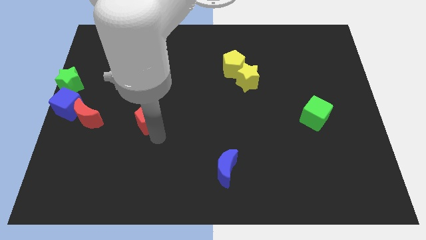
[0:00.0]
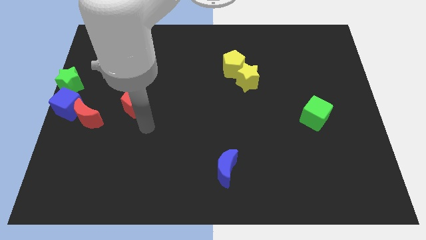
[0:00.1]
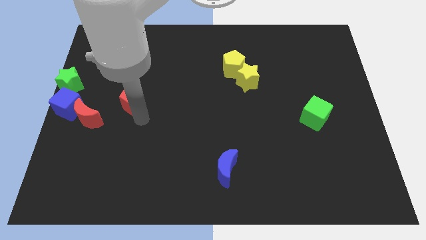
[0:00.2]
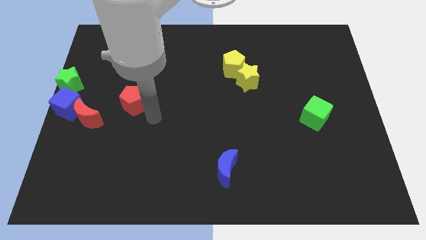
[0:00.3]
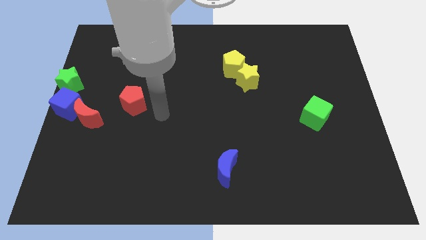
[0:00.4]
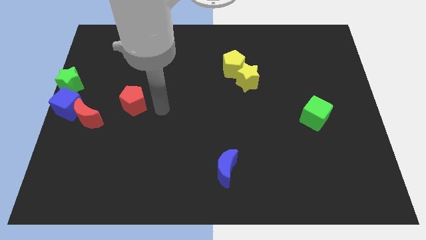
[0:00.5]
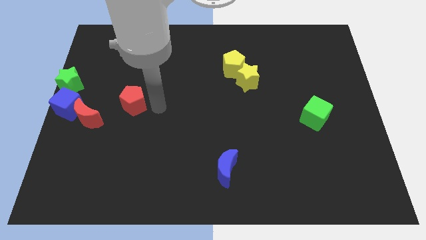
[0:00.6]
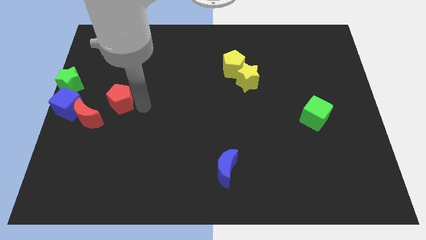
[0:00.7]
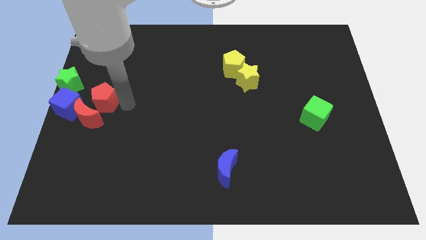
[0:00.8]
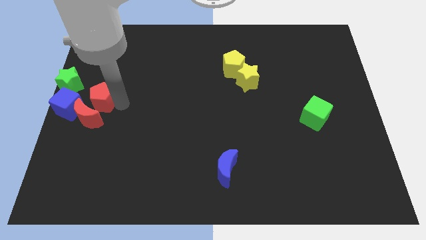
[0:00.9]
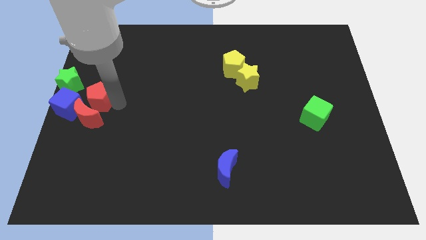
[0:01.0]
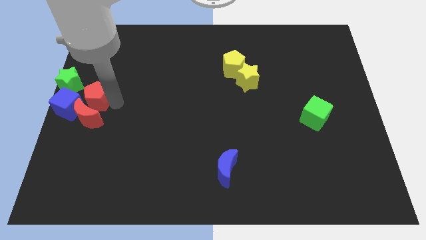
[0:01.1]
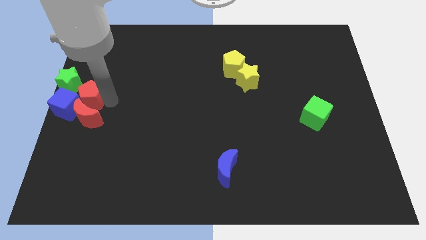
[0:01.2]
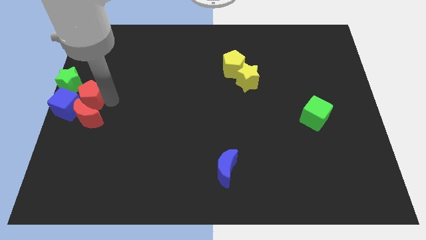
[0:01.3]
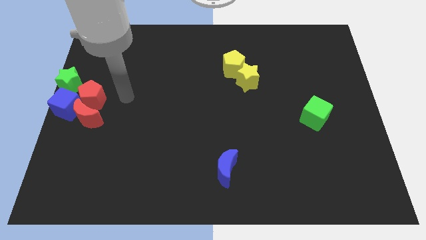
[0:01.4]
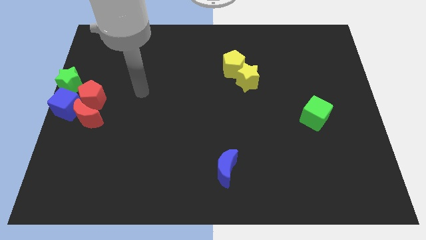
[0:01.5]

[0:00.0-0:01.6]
push red pentagon to the left center of the board

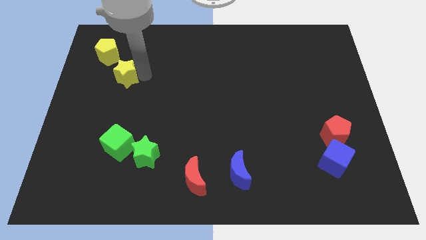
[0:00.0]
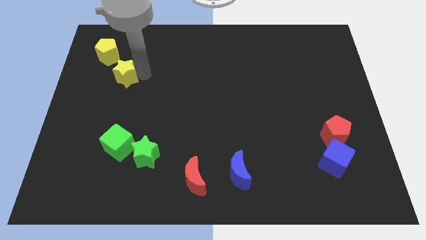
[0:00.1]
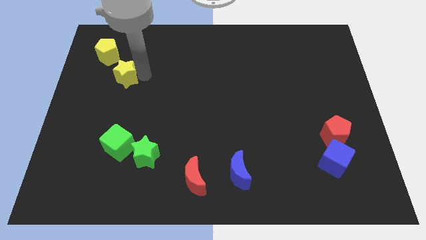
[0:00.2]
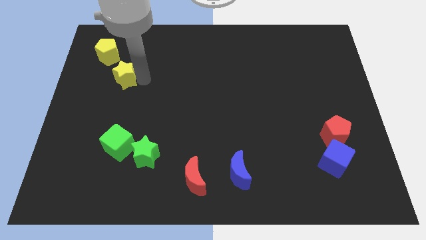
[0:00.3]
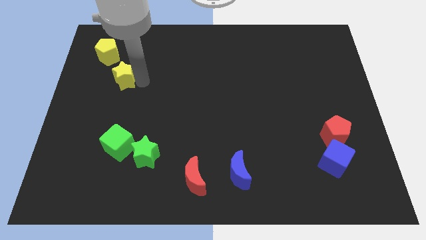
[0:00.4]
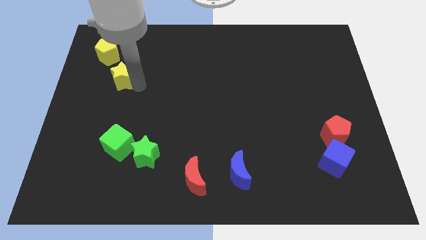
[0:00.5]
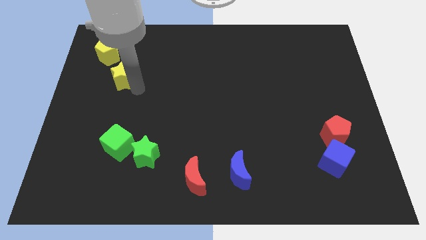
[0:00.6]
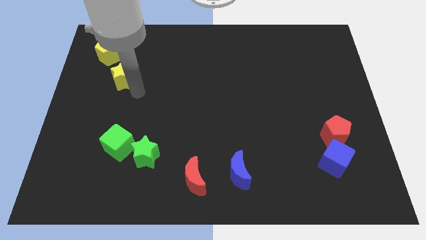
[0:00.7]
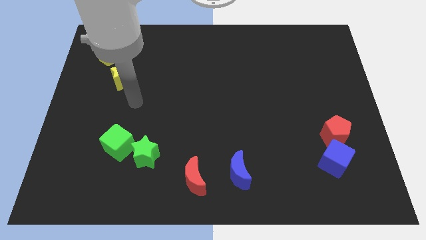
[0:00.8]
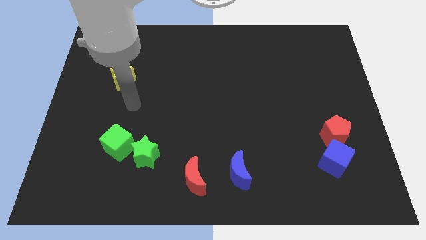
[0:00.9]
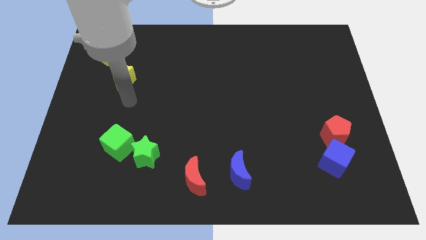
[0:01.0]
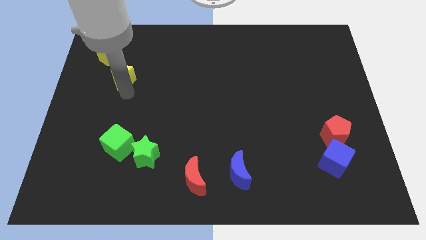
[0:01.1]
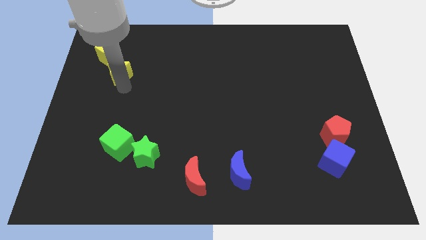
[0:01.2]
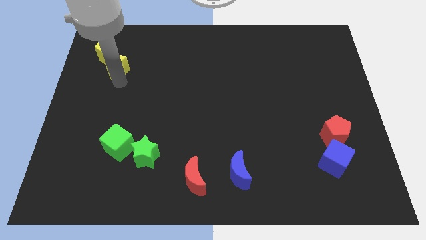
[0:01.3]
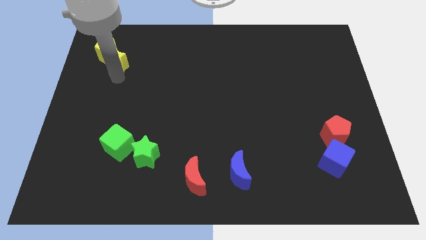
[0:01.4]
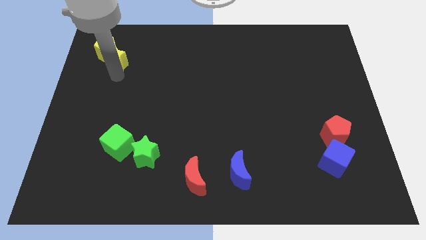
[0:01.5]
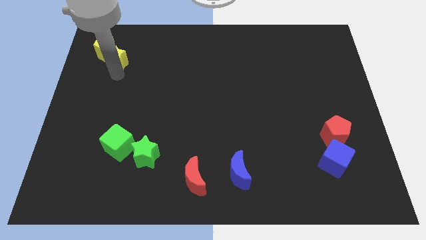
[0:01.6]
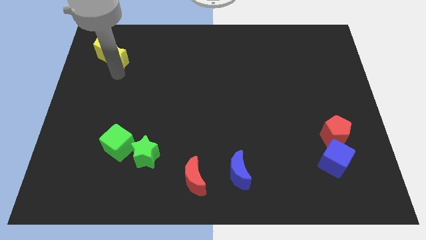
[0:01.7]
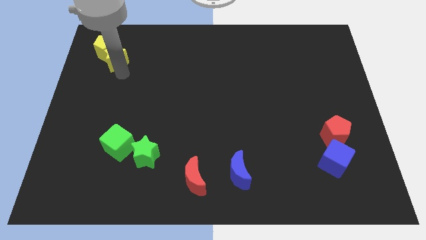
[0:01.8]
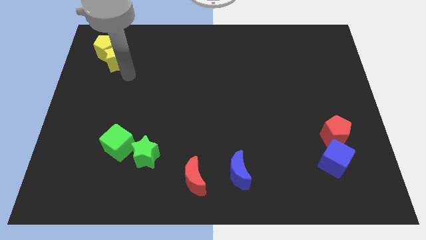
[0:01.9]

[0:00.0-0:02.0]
push the yellow star into yellow pentagon

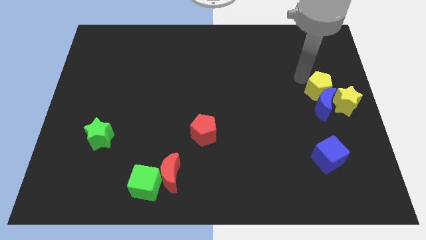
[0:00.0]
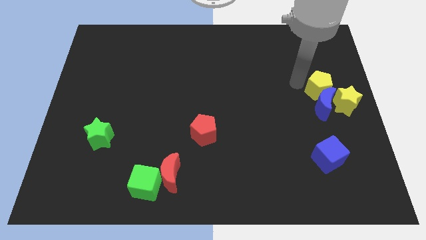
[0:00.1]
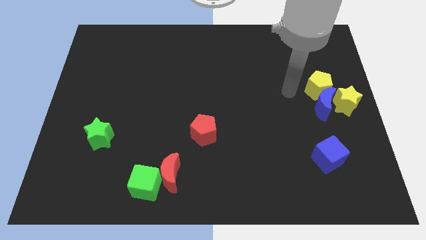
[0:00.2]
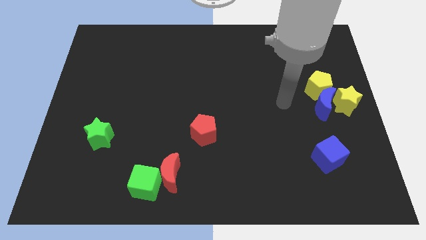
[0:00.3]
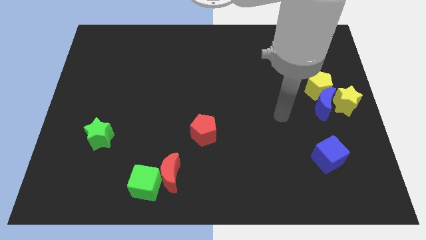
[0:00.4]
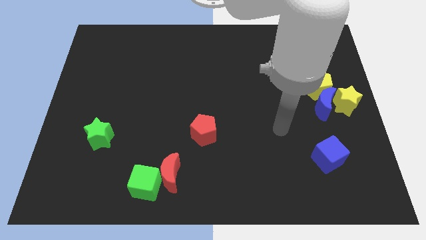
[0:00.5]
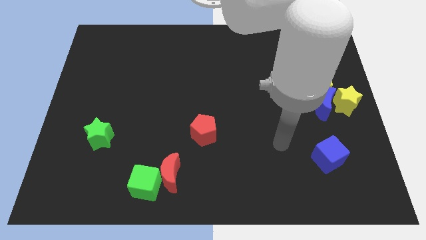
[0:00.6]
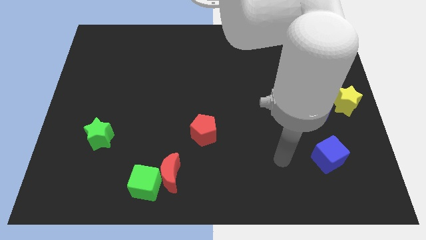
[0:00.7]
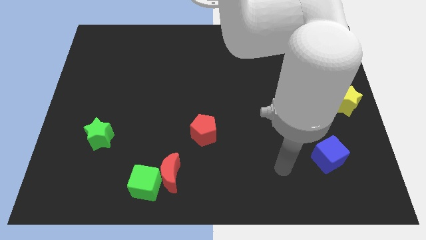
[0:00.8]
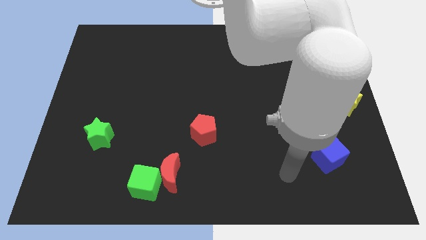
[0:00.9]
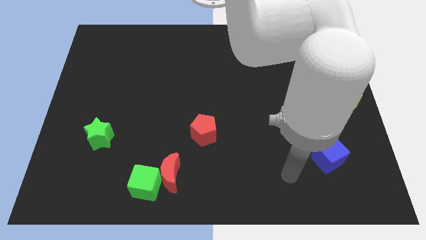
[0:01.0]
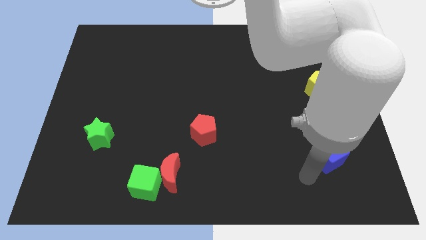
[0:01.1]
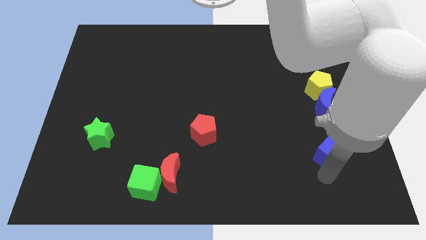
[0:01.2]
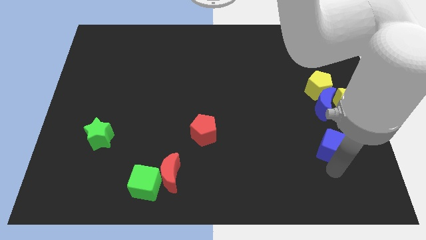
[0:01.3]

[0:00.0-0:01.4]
move your arm away from the yellow pentagon

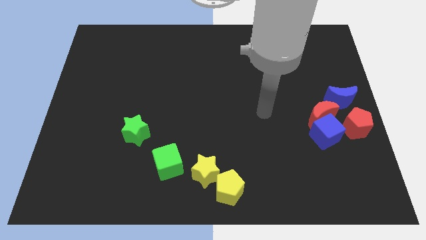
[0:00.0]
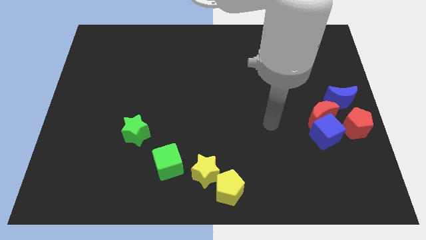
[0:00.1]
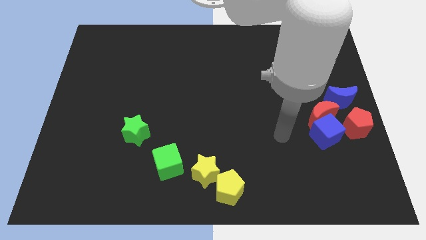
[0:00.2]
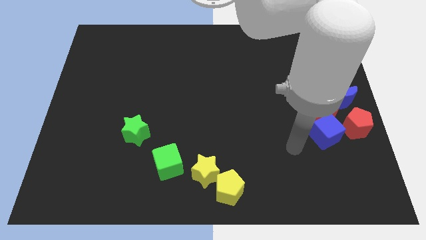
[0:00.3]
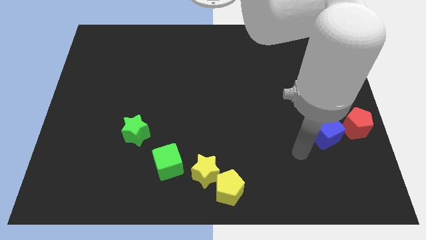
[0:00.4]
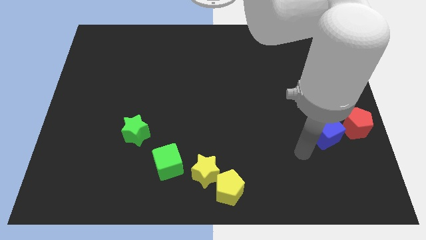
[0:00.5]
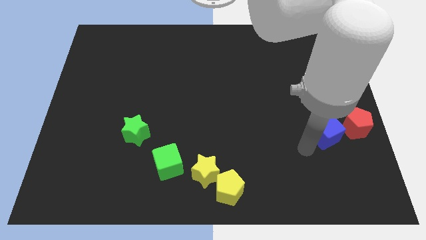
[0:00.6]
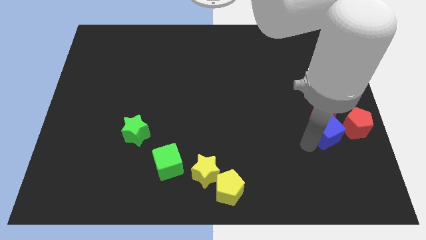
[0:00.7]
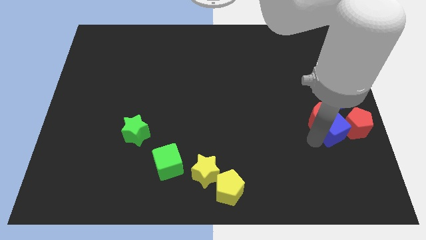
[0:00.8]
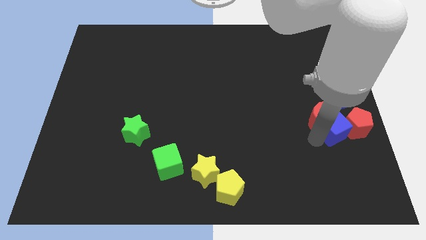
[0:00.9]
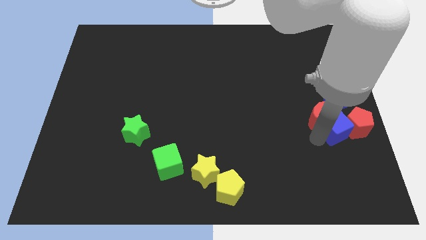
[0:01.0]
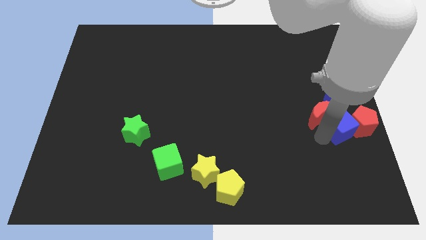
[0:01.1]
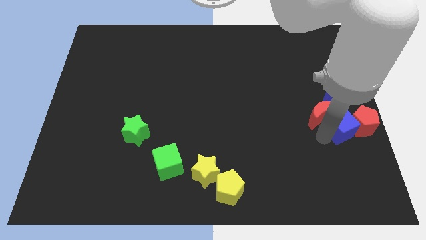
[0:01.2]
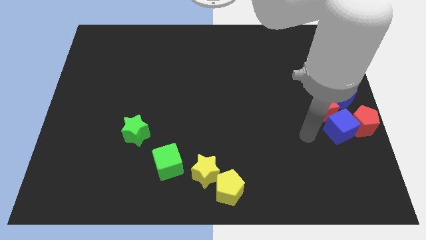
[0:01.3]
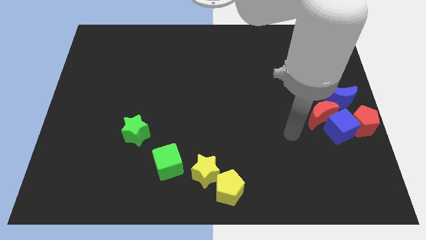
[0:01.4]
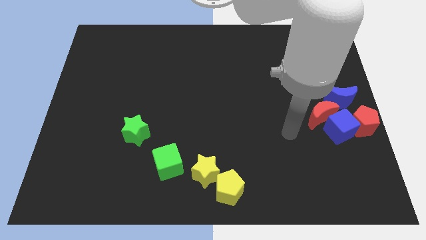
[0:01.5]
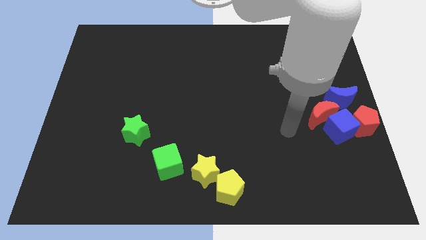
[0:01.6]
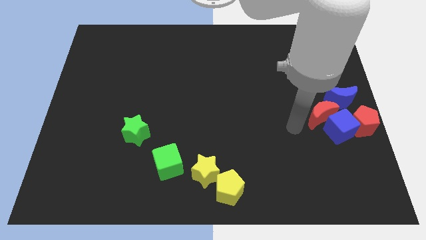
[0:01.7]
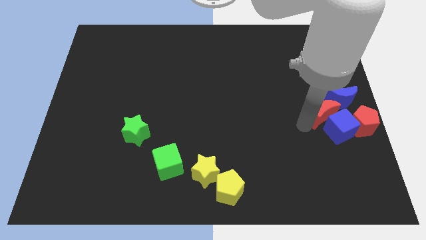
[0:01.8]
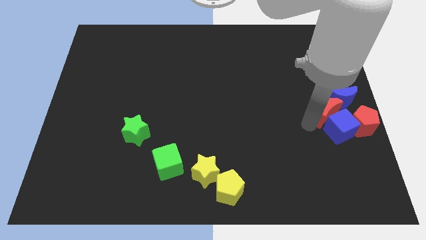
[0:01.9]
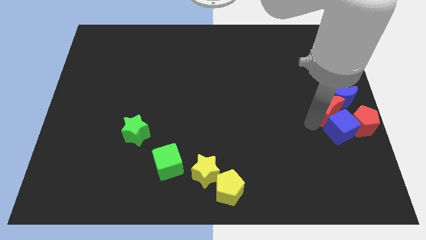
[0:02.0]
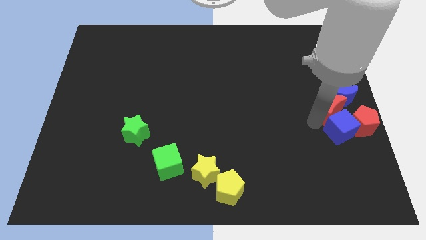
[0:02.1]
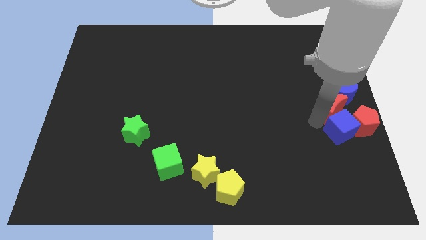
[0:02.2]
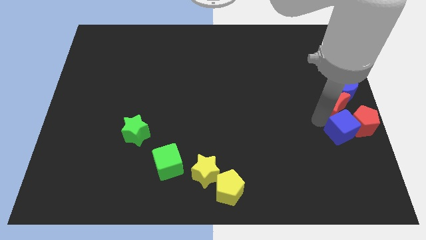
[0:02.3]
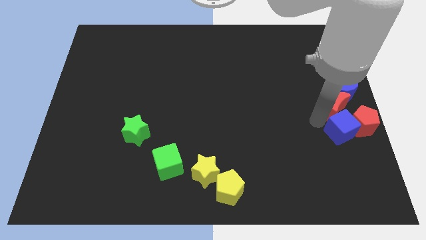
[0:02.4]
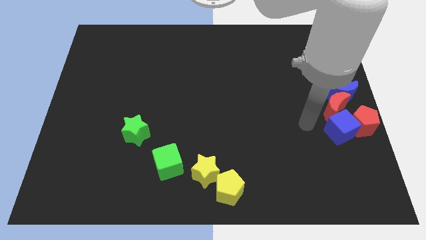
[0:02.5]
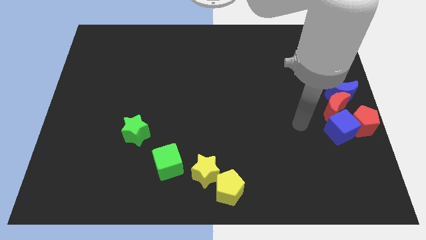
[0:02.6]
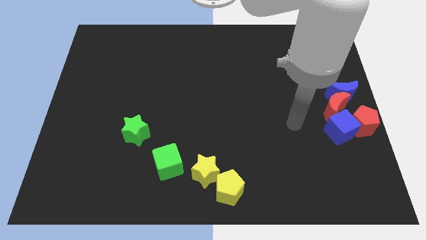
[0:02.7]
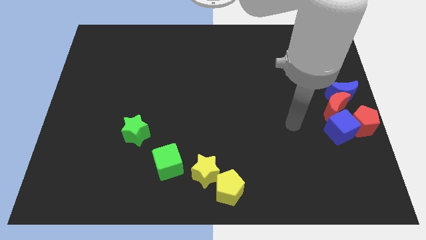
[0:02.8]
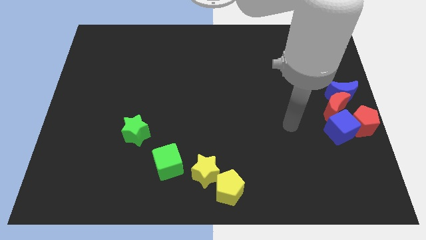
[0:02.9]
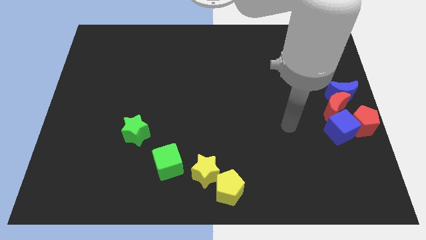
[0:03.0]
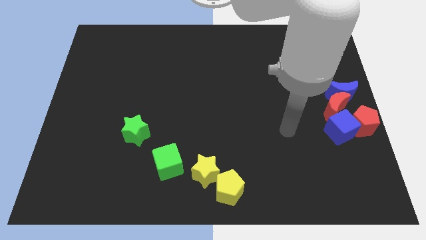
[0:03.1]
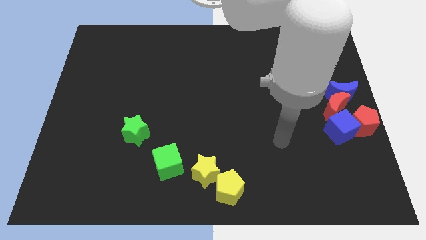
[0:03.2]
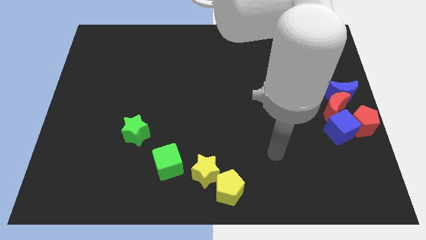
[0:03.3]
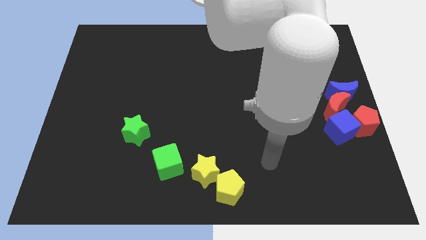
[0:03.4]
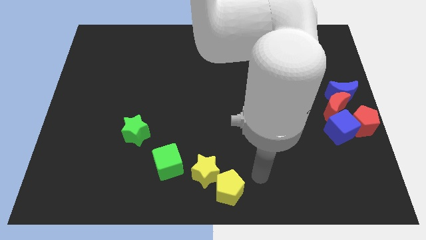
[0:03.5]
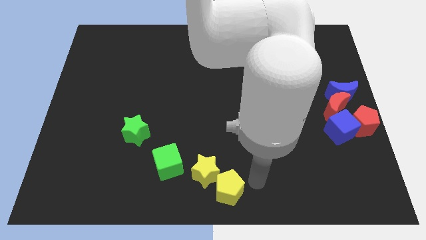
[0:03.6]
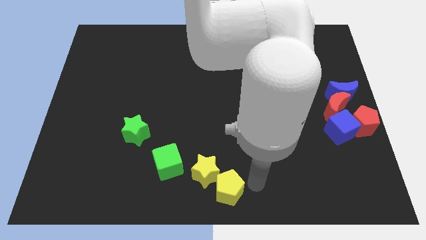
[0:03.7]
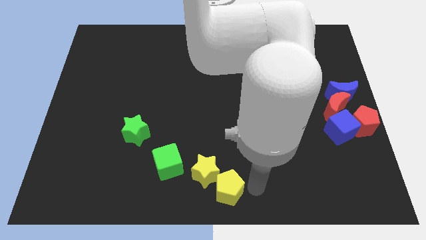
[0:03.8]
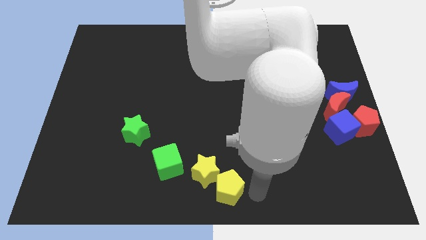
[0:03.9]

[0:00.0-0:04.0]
push the blue cube into the red pentagon
